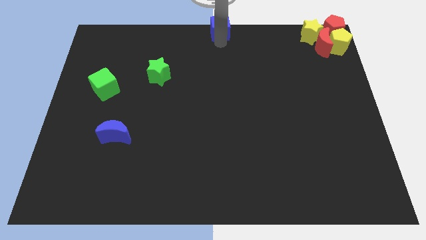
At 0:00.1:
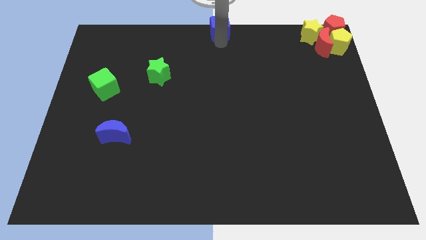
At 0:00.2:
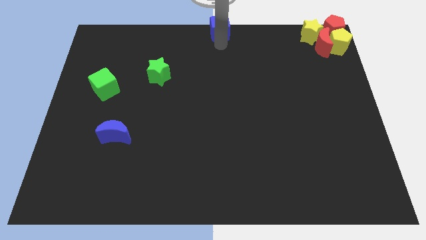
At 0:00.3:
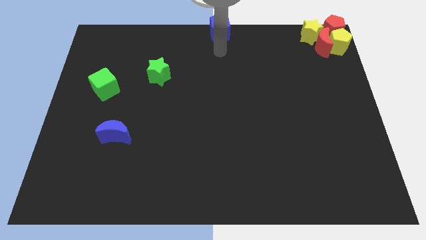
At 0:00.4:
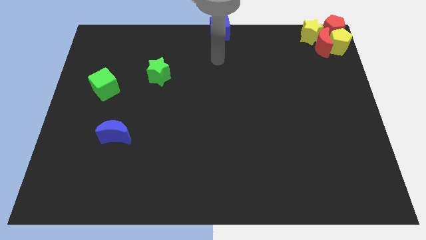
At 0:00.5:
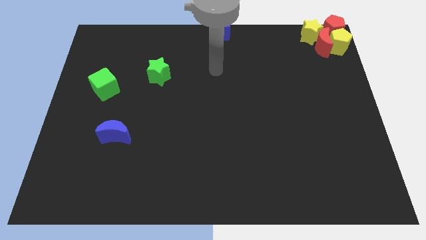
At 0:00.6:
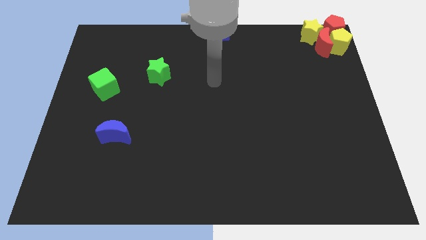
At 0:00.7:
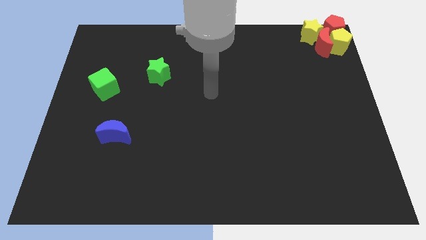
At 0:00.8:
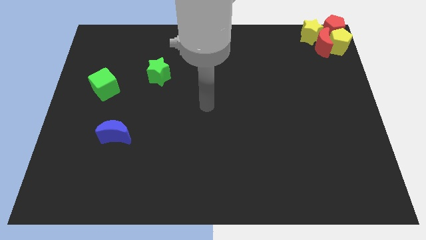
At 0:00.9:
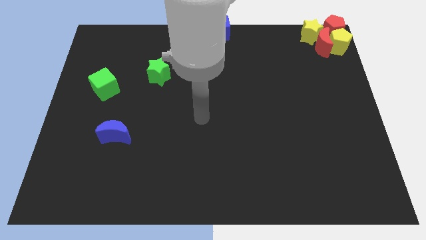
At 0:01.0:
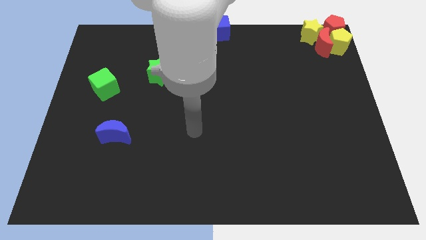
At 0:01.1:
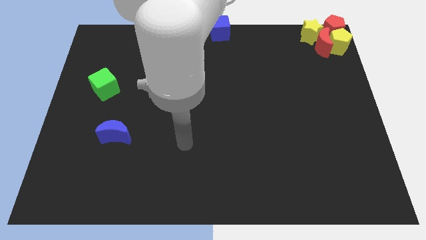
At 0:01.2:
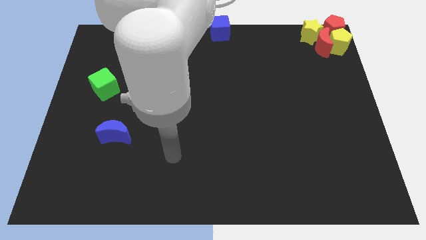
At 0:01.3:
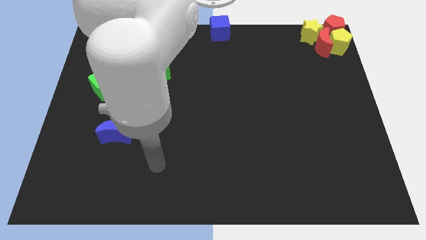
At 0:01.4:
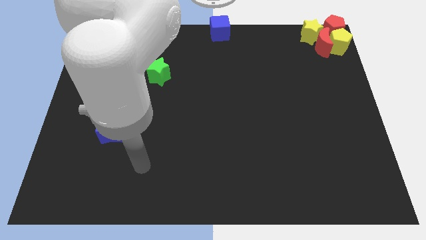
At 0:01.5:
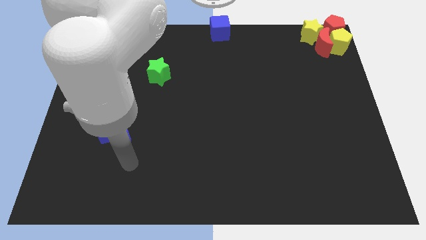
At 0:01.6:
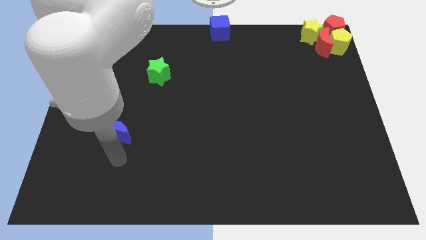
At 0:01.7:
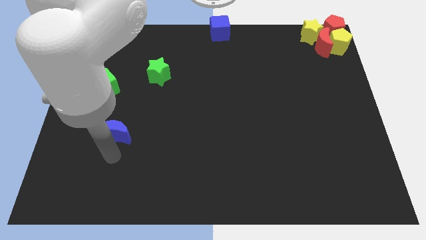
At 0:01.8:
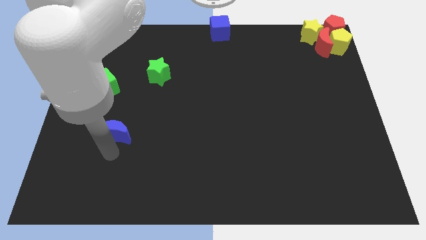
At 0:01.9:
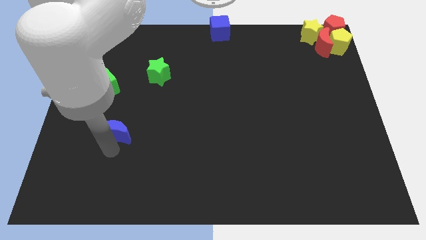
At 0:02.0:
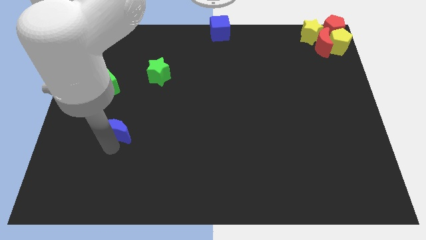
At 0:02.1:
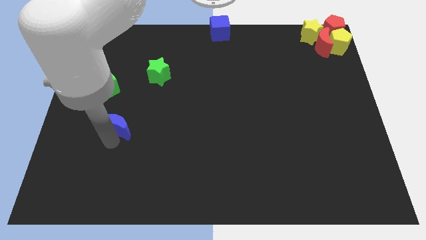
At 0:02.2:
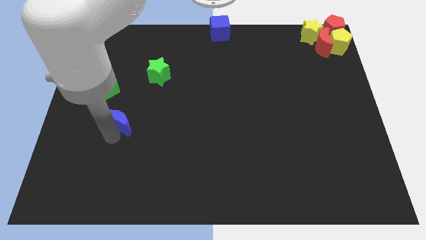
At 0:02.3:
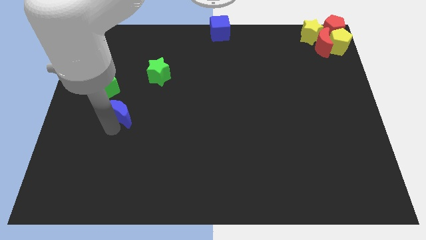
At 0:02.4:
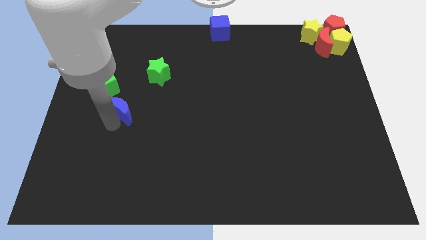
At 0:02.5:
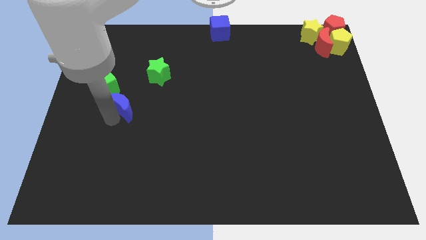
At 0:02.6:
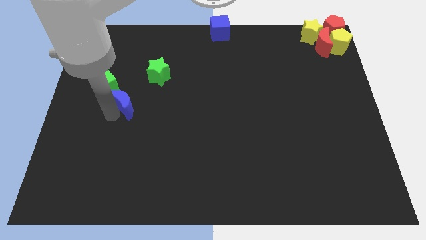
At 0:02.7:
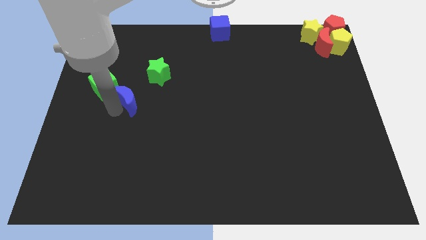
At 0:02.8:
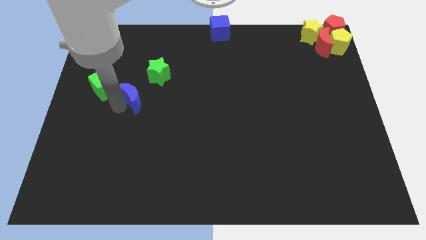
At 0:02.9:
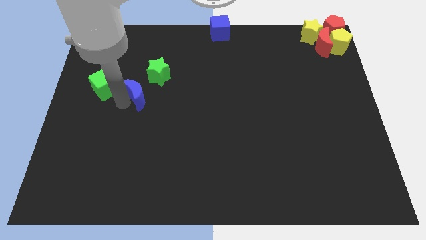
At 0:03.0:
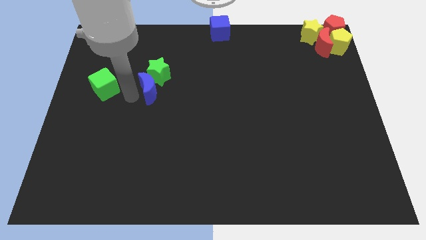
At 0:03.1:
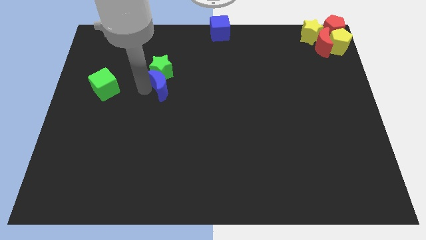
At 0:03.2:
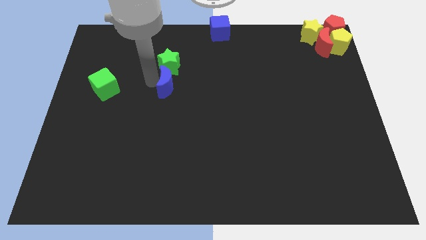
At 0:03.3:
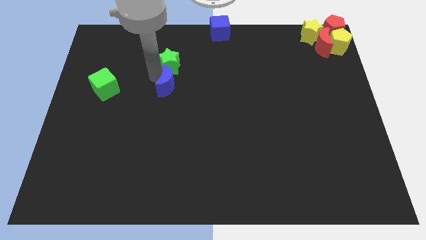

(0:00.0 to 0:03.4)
bring the blue crescent at the bottom side of the green star

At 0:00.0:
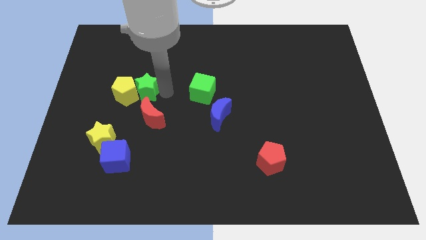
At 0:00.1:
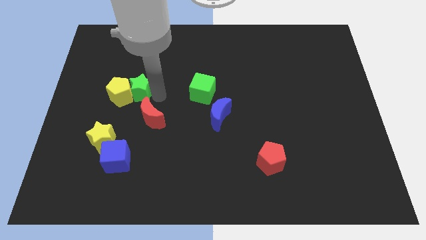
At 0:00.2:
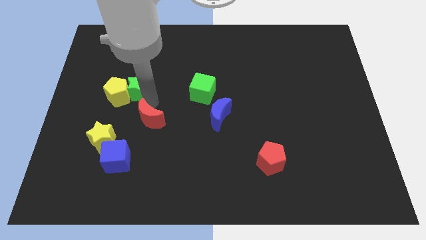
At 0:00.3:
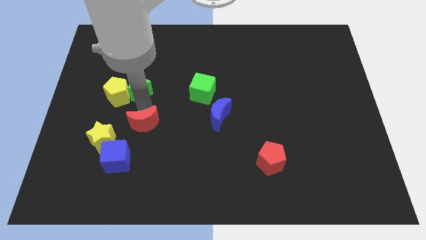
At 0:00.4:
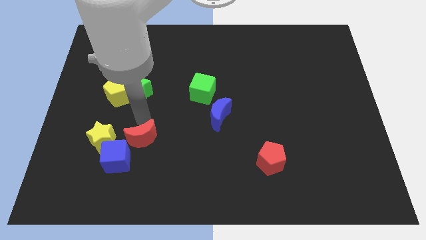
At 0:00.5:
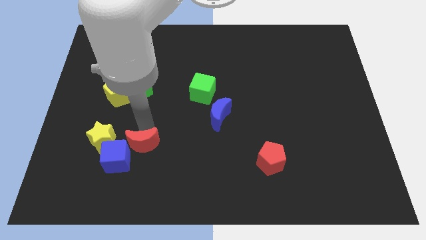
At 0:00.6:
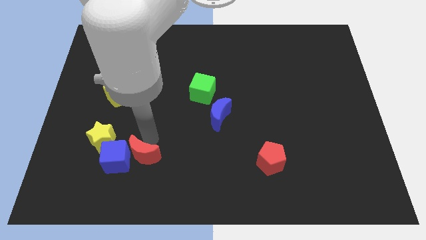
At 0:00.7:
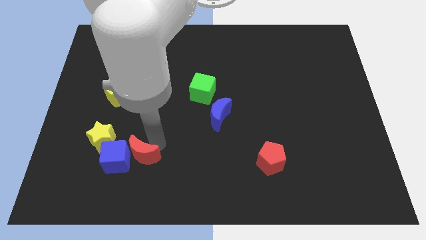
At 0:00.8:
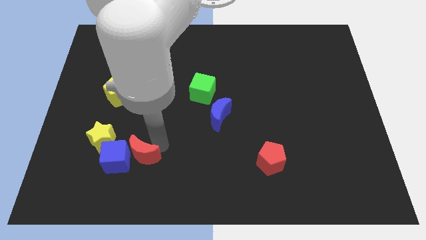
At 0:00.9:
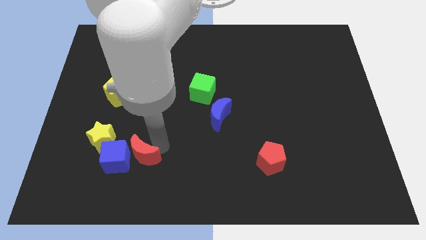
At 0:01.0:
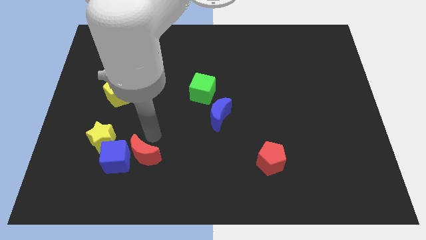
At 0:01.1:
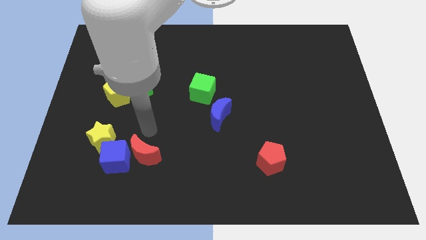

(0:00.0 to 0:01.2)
push the red crescent to the top right side of the blue cube

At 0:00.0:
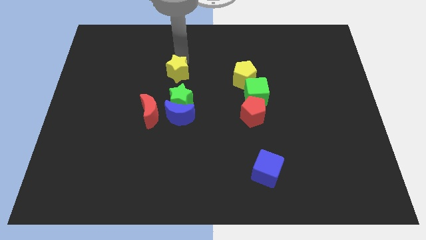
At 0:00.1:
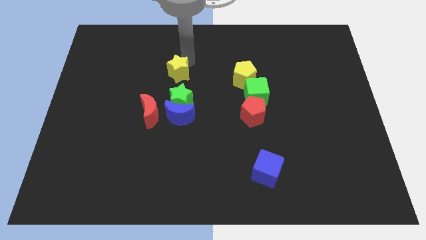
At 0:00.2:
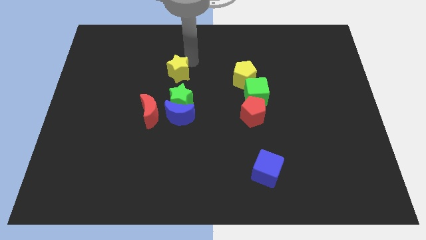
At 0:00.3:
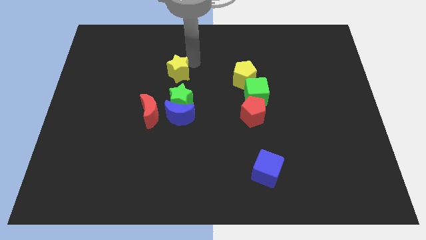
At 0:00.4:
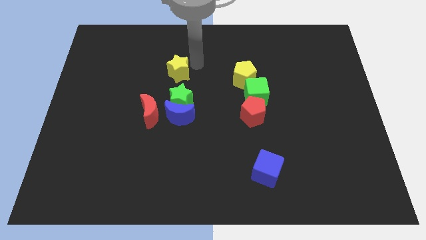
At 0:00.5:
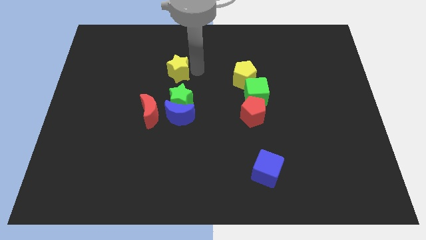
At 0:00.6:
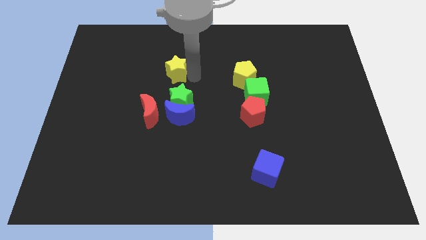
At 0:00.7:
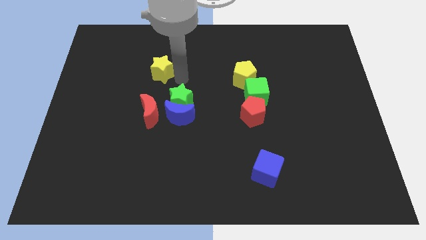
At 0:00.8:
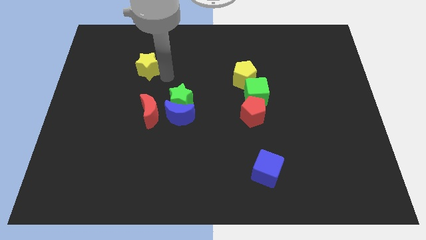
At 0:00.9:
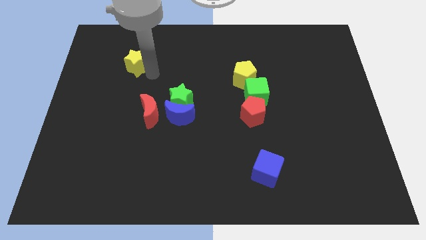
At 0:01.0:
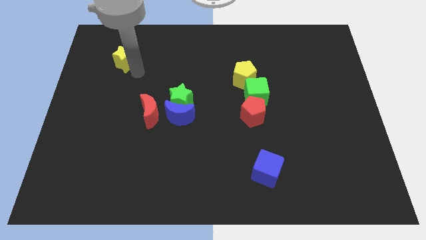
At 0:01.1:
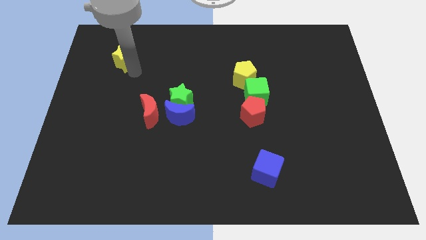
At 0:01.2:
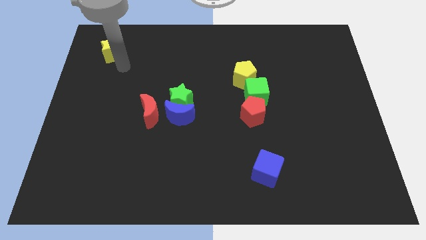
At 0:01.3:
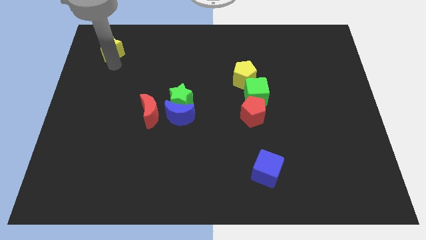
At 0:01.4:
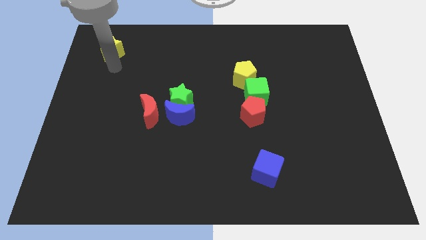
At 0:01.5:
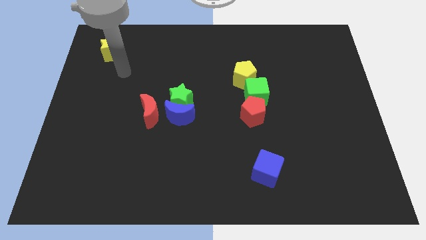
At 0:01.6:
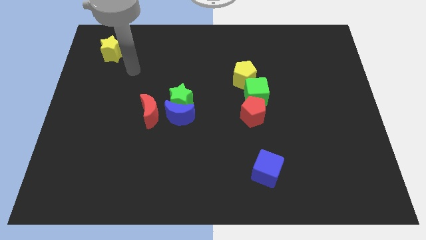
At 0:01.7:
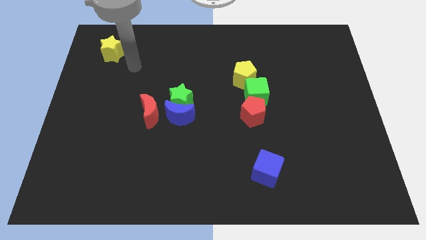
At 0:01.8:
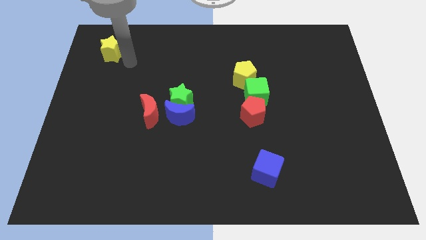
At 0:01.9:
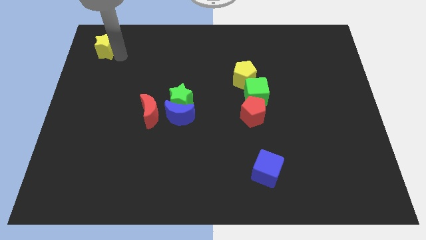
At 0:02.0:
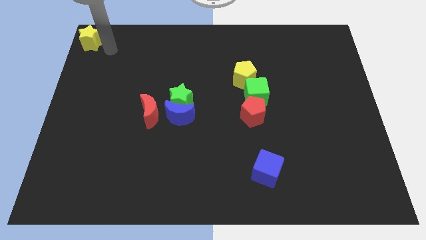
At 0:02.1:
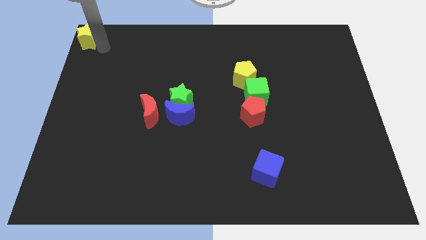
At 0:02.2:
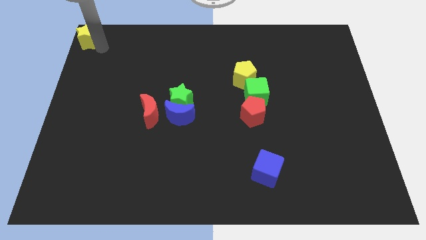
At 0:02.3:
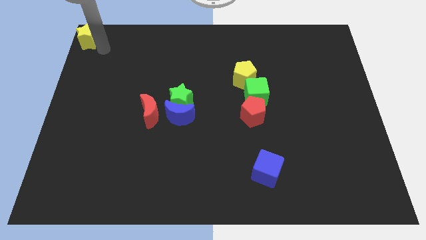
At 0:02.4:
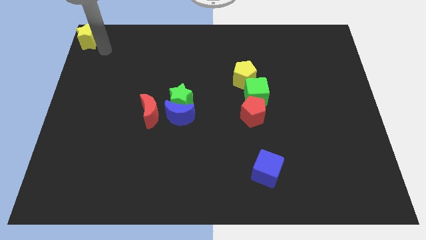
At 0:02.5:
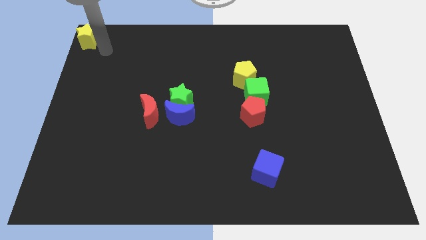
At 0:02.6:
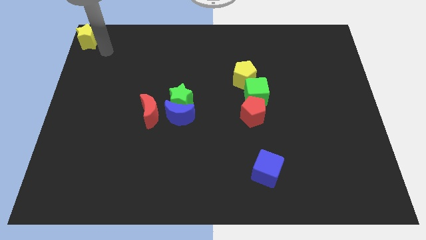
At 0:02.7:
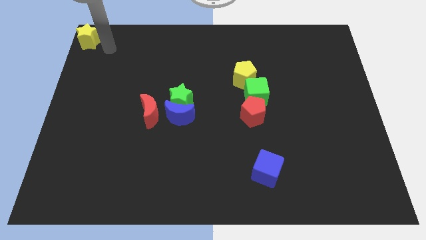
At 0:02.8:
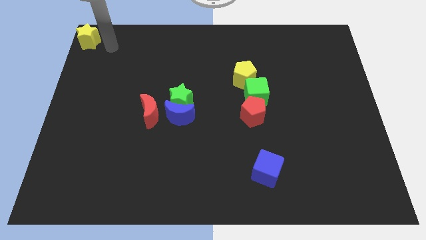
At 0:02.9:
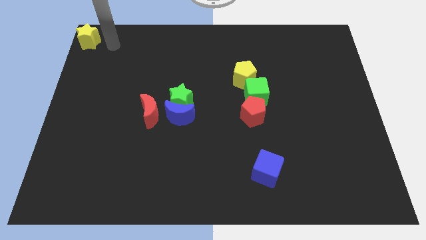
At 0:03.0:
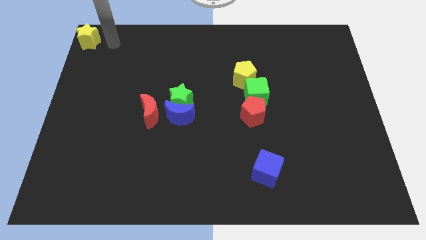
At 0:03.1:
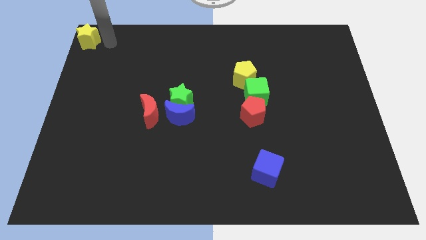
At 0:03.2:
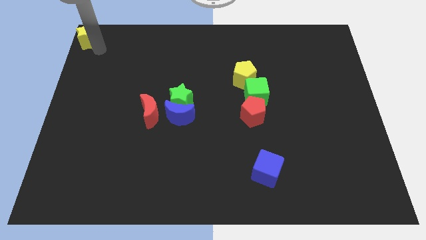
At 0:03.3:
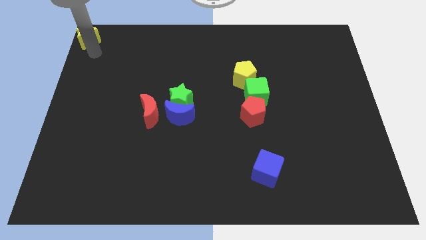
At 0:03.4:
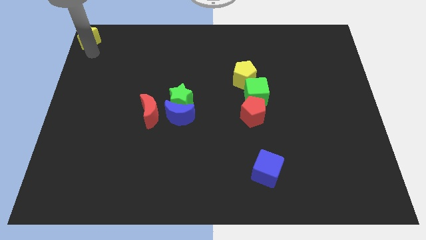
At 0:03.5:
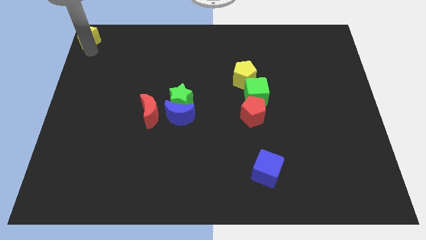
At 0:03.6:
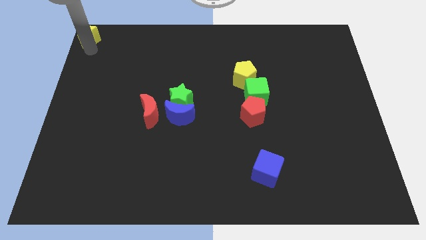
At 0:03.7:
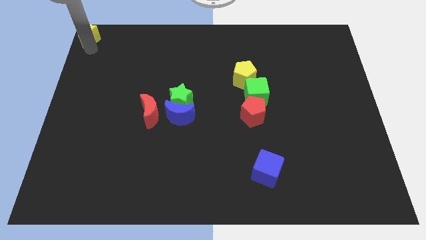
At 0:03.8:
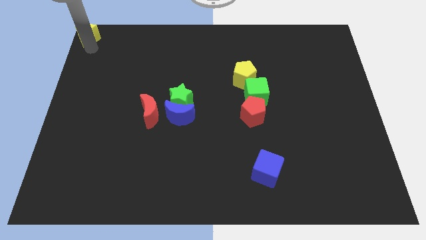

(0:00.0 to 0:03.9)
put the yellow star diagonally top left to the green star

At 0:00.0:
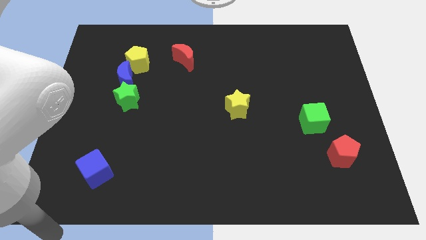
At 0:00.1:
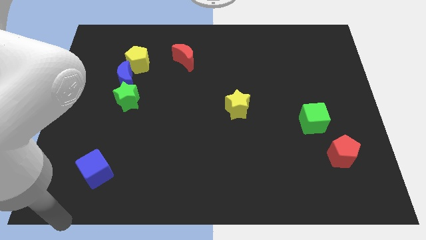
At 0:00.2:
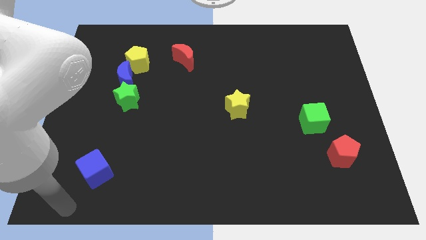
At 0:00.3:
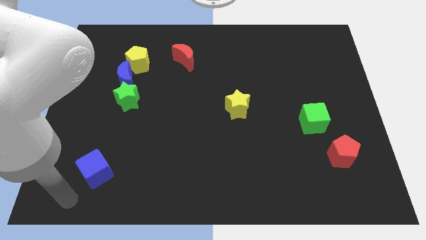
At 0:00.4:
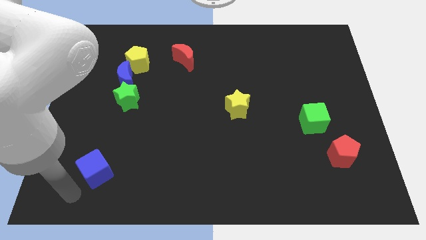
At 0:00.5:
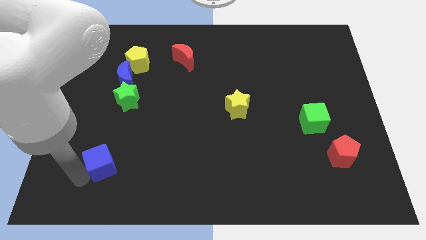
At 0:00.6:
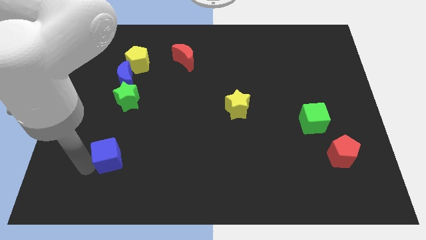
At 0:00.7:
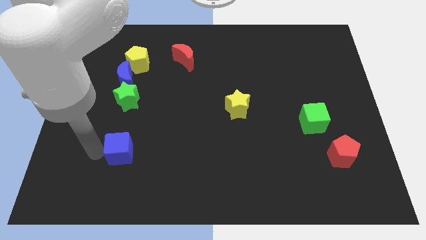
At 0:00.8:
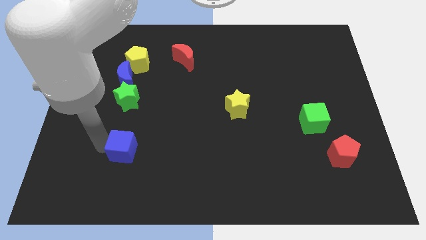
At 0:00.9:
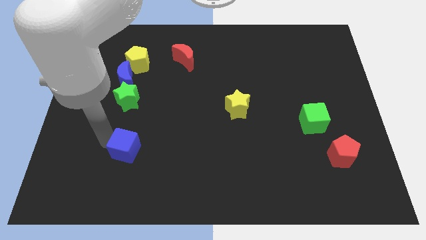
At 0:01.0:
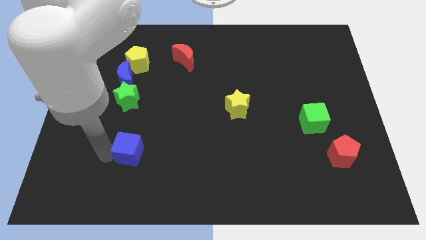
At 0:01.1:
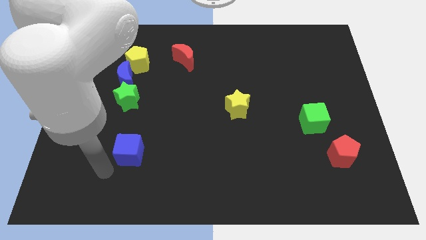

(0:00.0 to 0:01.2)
move the blue cube slightly to the top of the board
